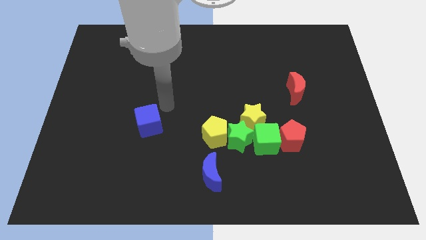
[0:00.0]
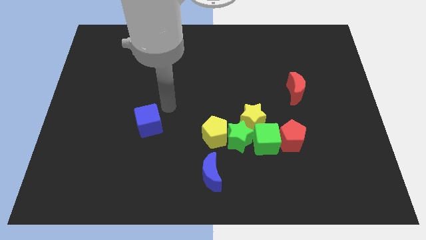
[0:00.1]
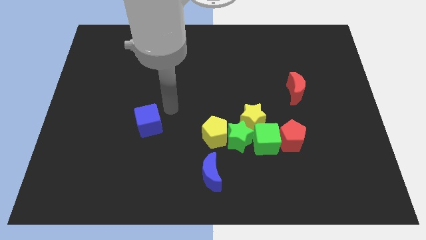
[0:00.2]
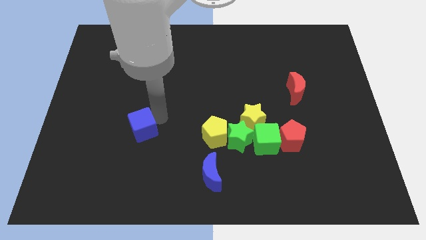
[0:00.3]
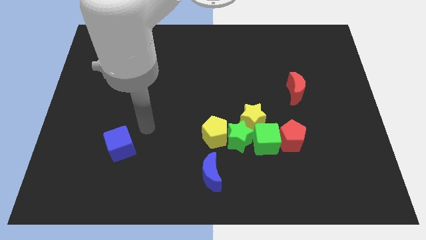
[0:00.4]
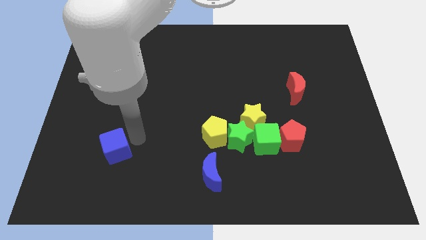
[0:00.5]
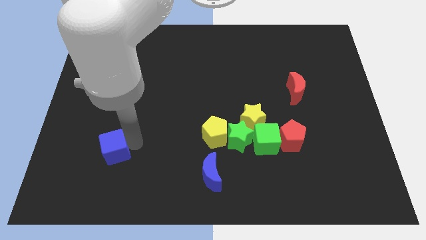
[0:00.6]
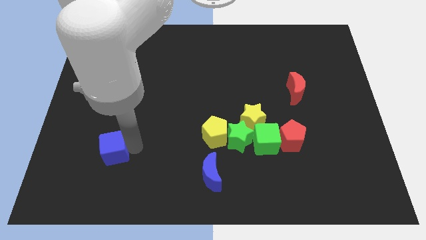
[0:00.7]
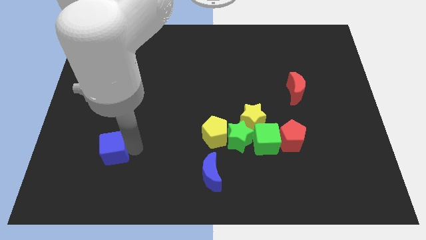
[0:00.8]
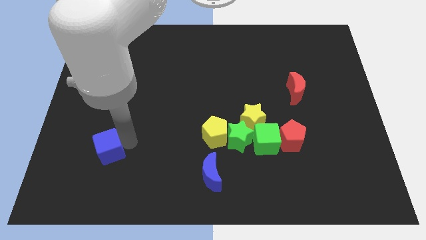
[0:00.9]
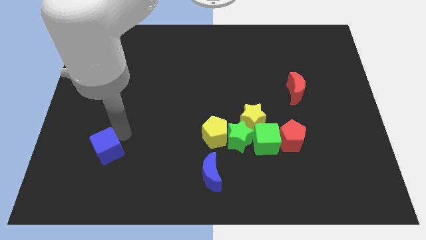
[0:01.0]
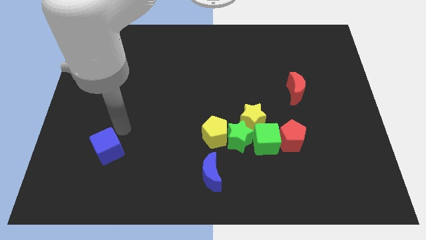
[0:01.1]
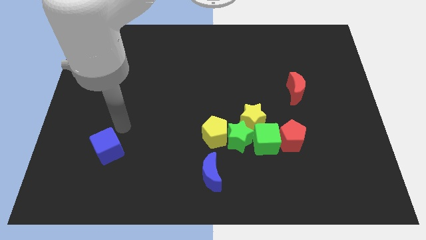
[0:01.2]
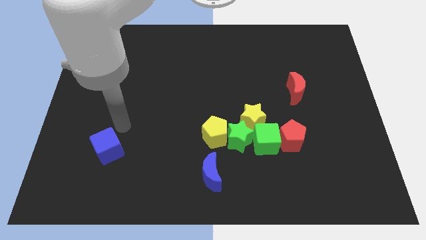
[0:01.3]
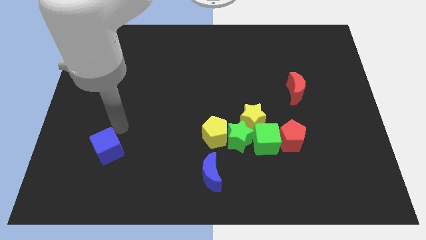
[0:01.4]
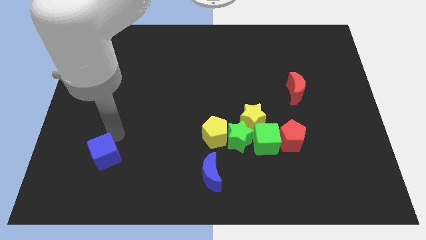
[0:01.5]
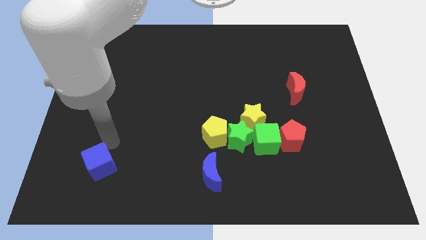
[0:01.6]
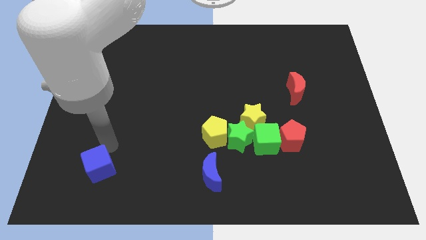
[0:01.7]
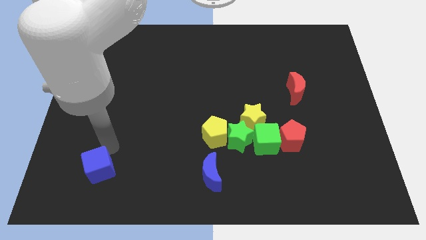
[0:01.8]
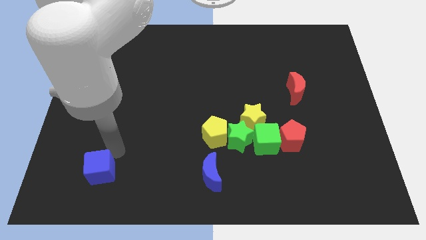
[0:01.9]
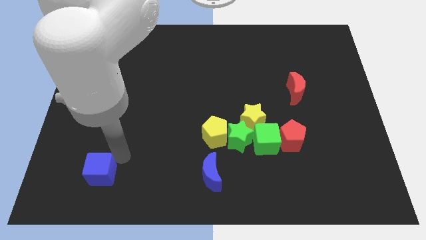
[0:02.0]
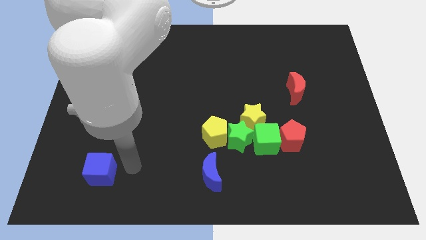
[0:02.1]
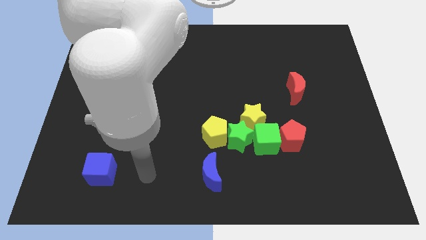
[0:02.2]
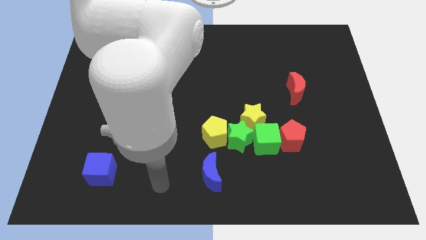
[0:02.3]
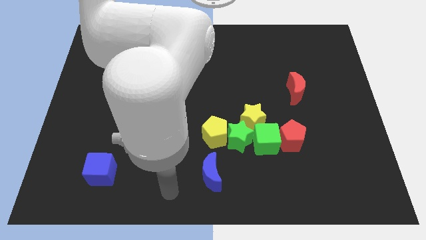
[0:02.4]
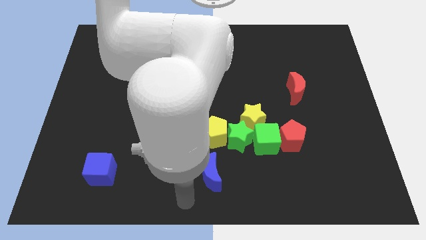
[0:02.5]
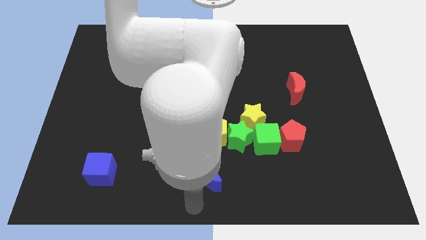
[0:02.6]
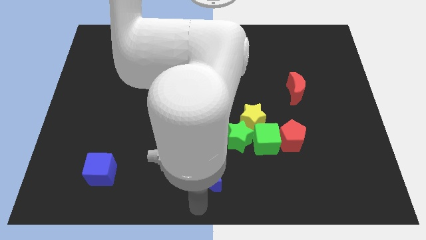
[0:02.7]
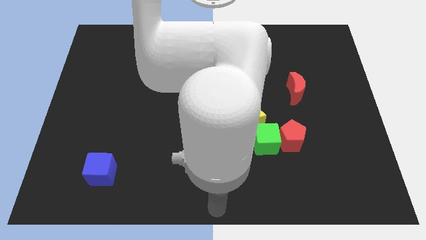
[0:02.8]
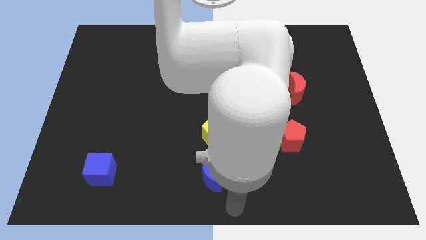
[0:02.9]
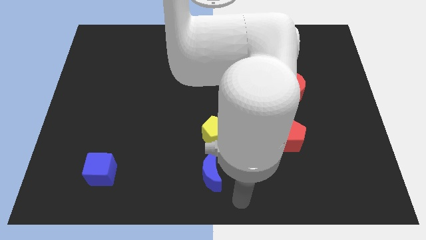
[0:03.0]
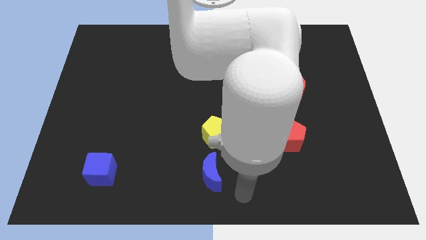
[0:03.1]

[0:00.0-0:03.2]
place the blue cube near to the bottom left corner

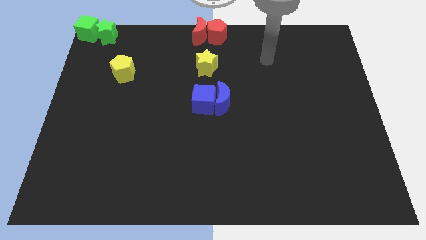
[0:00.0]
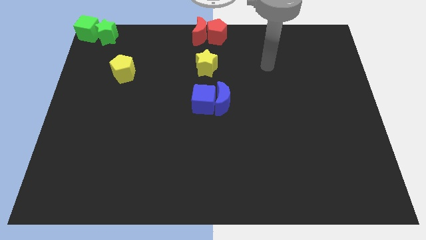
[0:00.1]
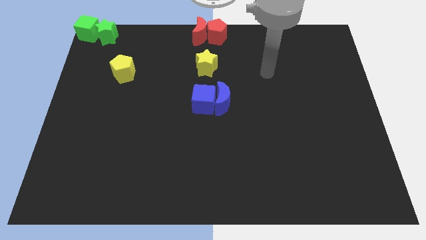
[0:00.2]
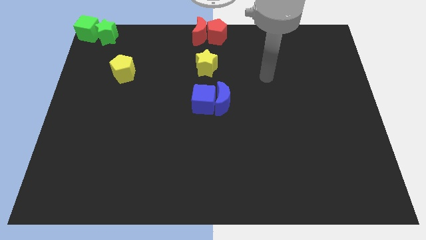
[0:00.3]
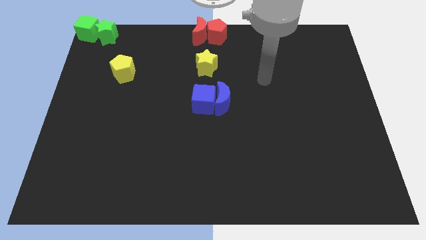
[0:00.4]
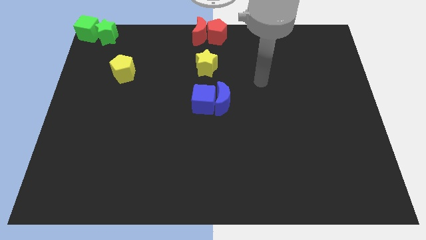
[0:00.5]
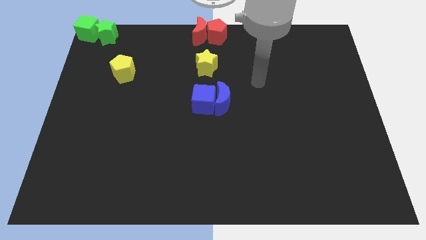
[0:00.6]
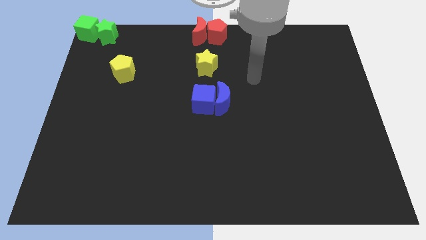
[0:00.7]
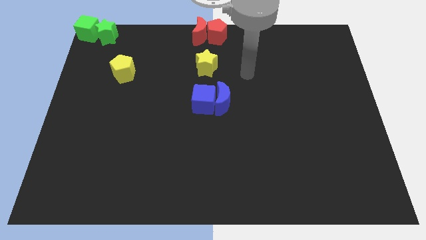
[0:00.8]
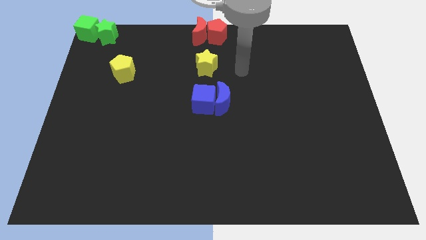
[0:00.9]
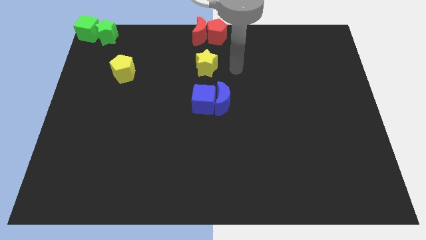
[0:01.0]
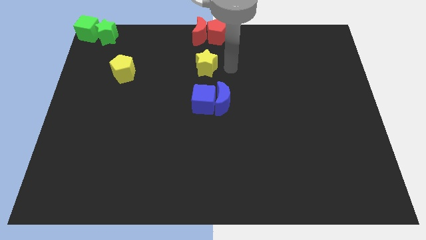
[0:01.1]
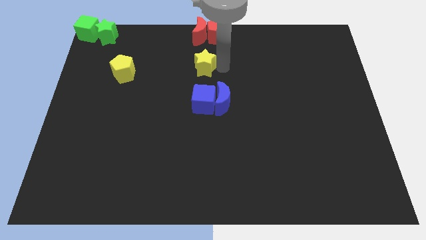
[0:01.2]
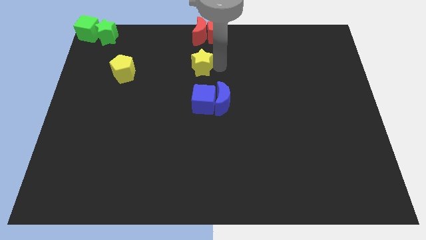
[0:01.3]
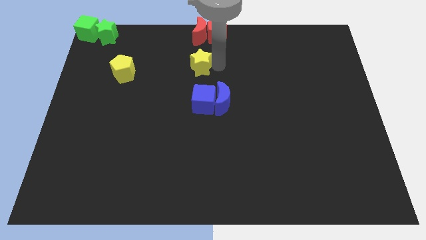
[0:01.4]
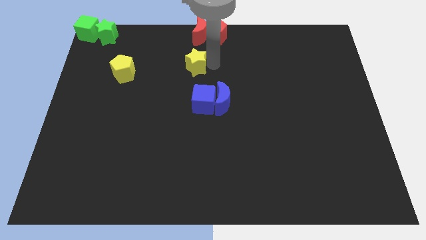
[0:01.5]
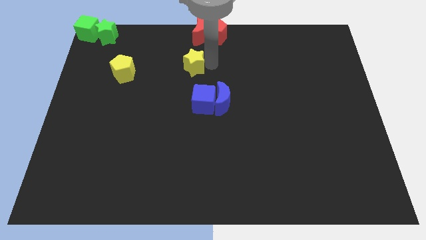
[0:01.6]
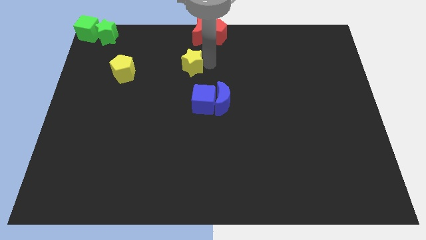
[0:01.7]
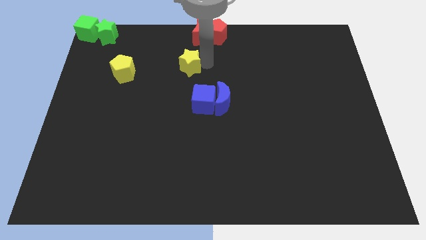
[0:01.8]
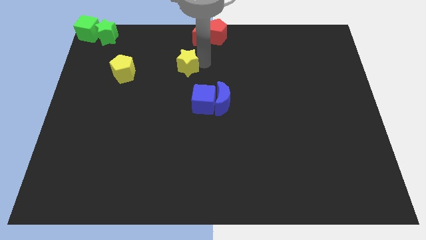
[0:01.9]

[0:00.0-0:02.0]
push the yellow star towards the yellow pentagon

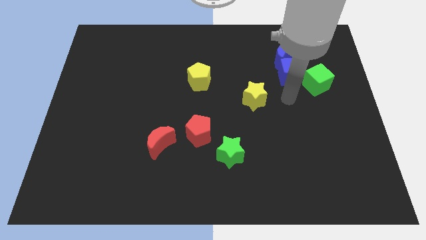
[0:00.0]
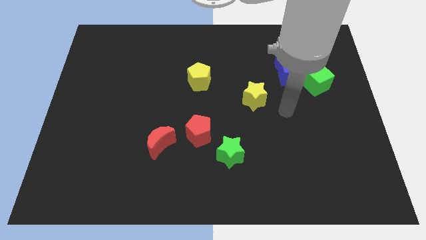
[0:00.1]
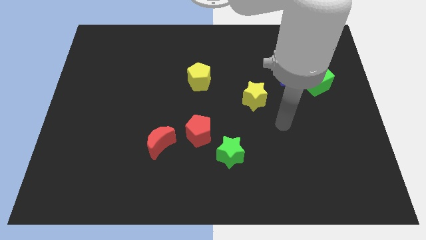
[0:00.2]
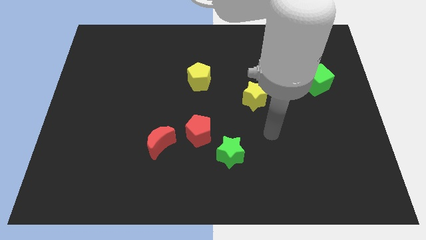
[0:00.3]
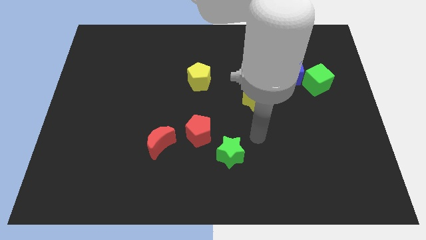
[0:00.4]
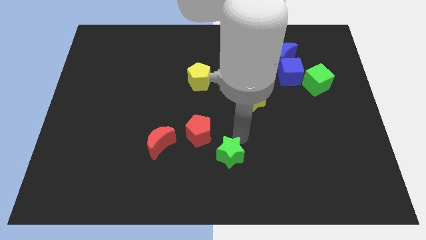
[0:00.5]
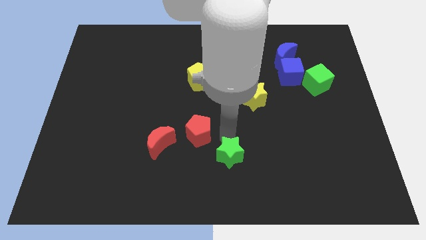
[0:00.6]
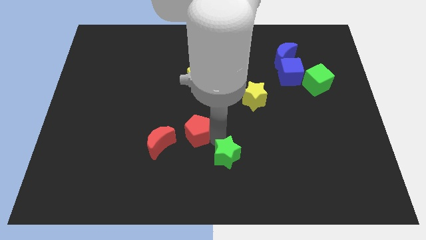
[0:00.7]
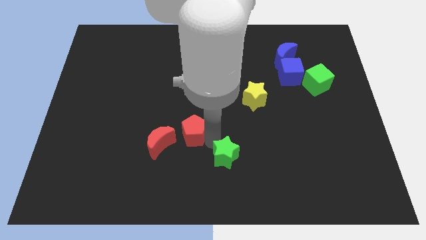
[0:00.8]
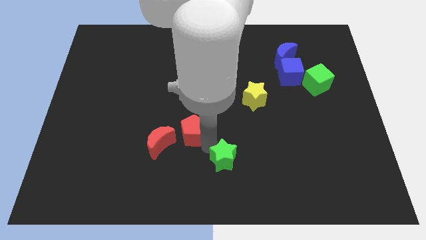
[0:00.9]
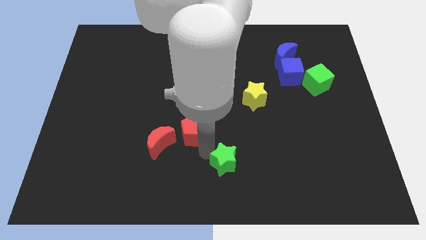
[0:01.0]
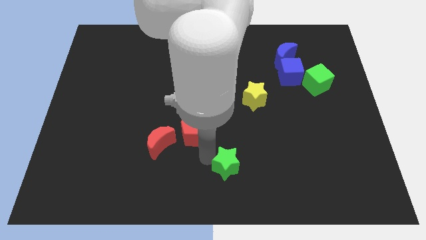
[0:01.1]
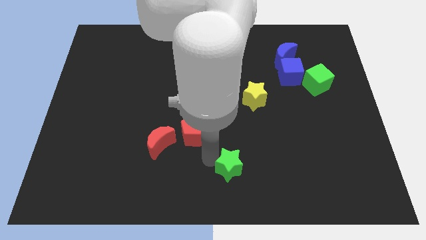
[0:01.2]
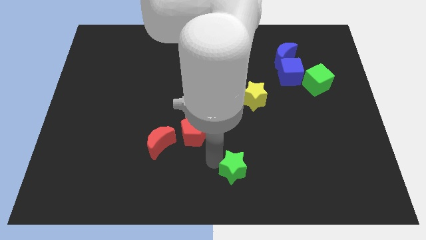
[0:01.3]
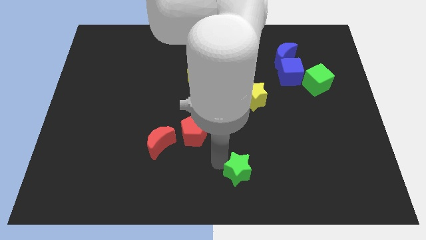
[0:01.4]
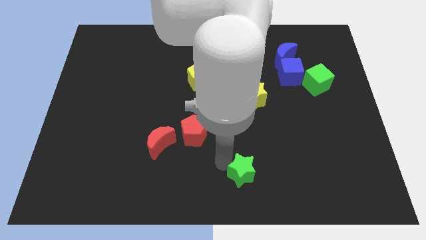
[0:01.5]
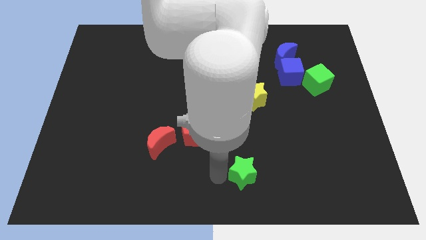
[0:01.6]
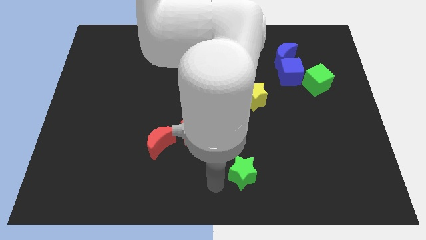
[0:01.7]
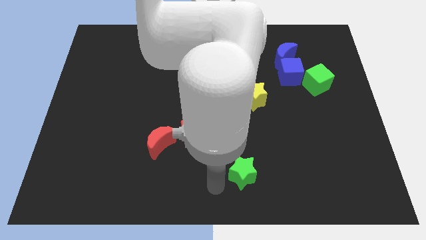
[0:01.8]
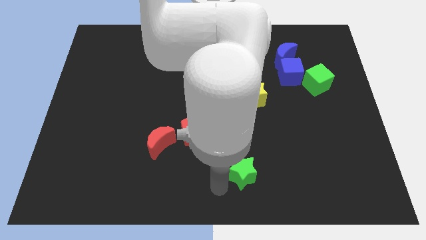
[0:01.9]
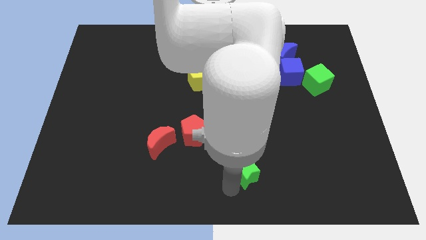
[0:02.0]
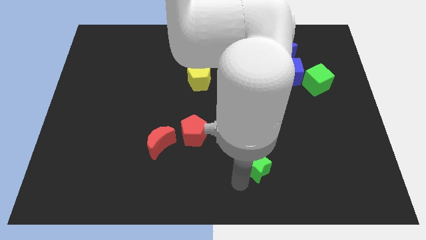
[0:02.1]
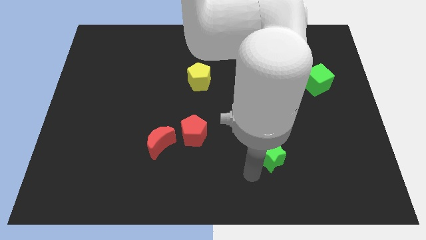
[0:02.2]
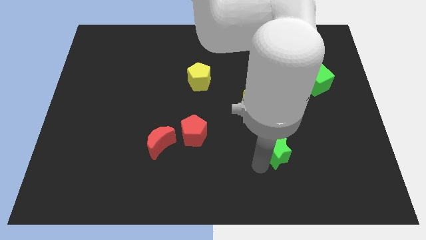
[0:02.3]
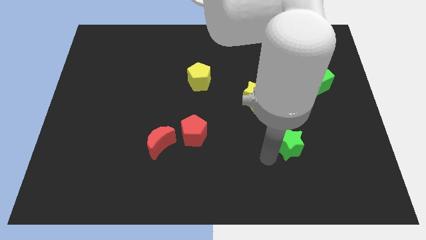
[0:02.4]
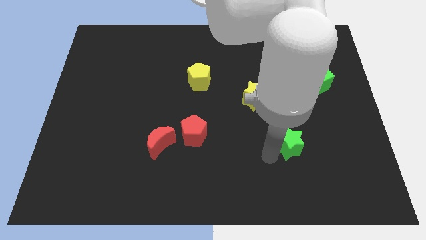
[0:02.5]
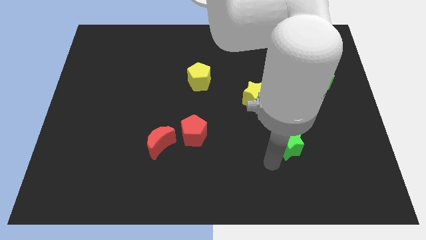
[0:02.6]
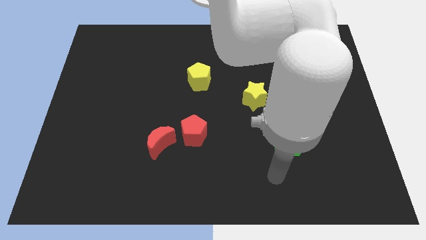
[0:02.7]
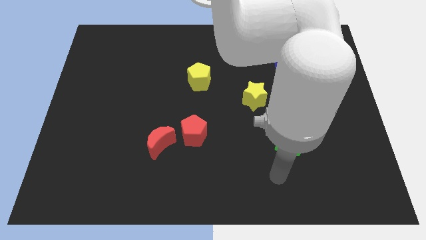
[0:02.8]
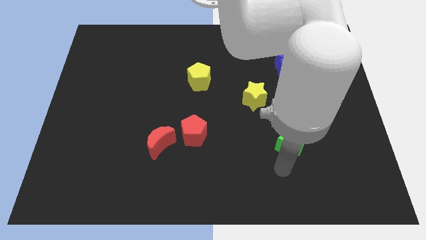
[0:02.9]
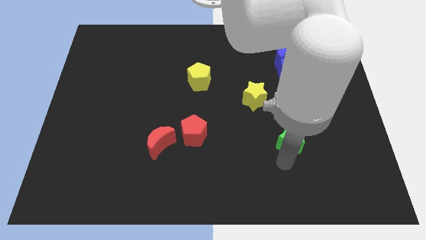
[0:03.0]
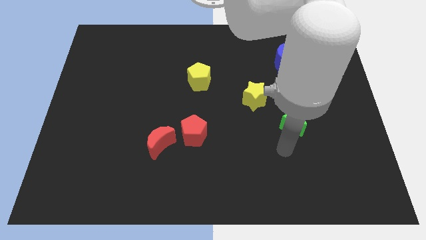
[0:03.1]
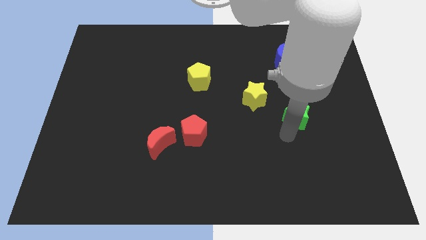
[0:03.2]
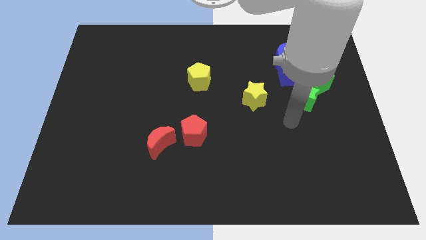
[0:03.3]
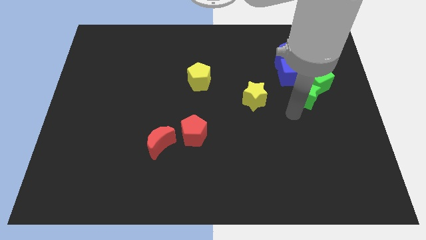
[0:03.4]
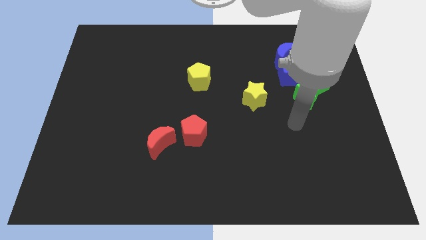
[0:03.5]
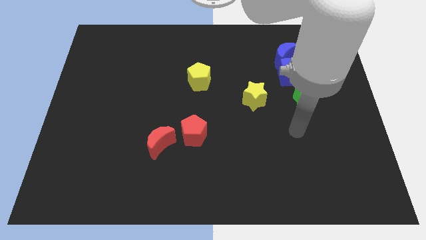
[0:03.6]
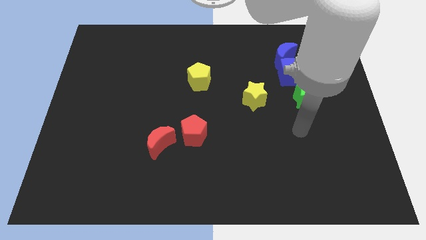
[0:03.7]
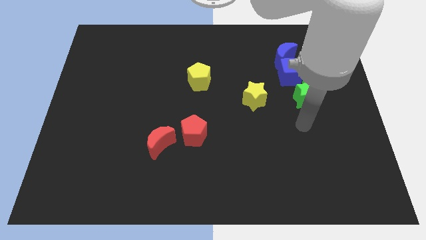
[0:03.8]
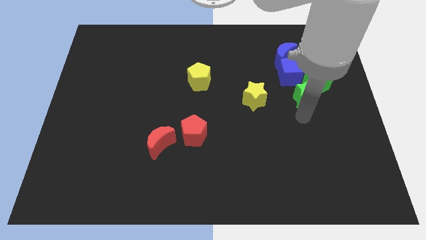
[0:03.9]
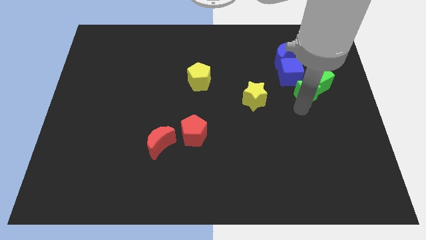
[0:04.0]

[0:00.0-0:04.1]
move the green star left to the green cube
